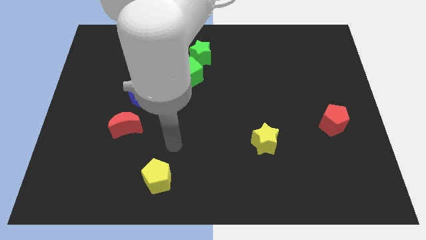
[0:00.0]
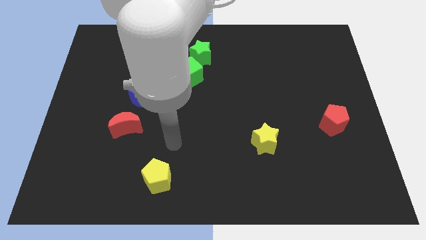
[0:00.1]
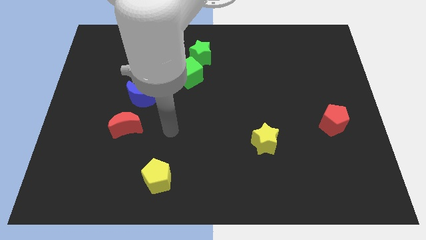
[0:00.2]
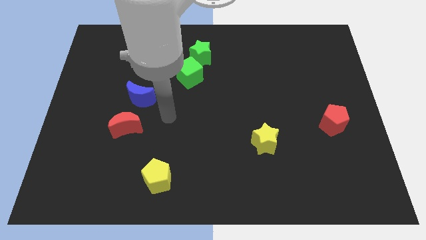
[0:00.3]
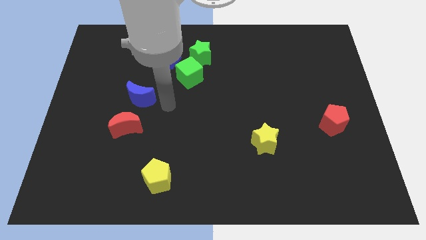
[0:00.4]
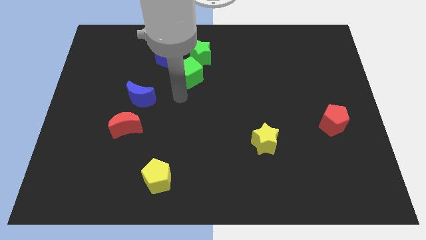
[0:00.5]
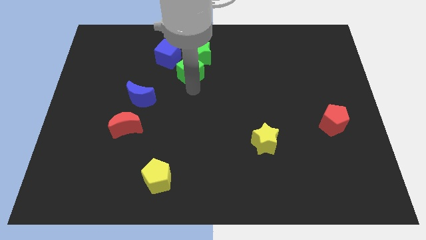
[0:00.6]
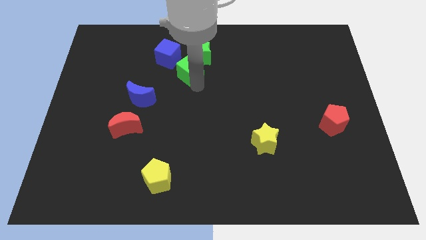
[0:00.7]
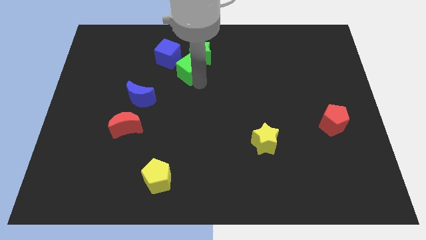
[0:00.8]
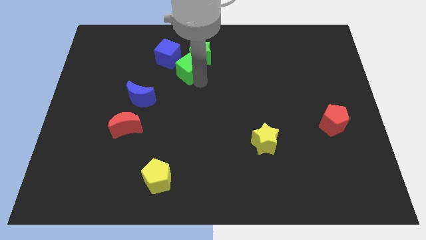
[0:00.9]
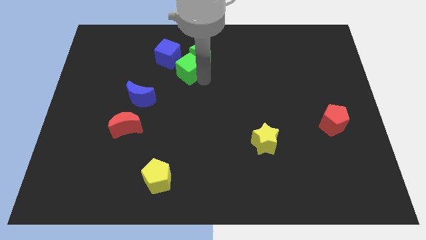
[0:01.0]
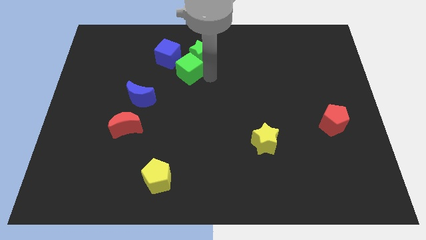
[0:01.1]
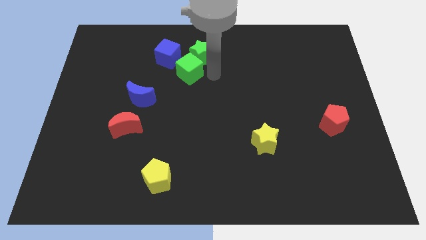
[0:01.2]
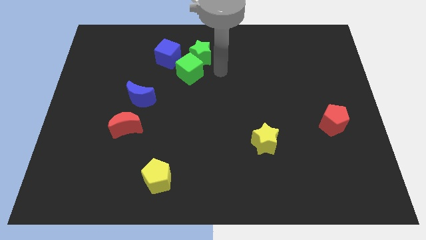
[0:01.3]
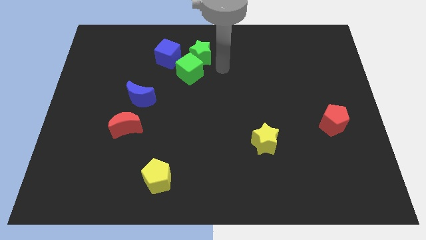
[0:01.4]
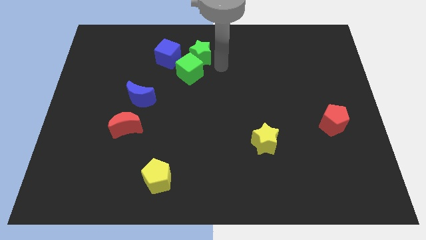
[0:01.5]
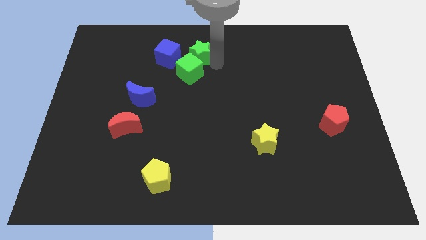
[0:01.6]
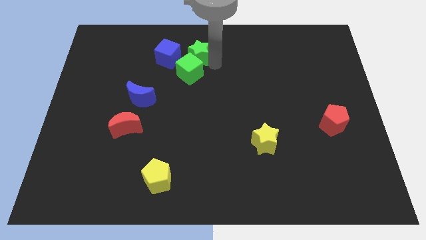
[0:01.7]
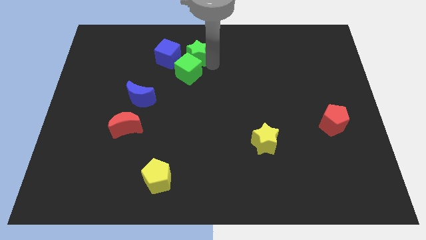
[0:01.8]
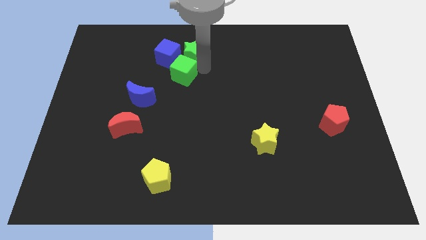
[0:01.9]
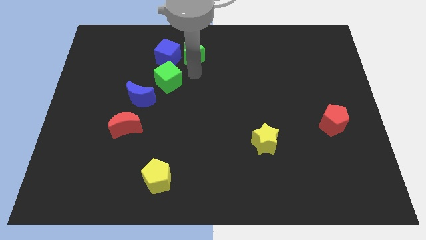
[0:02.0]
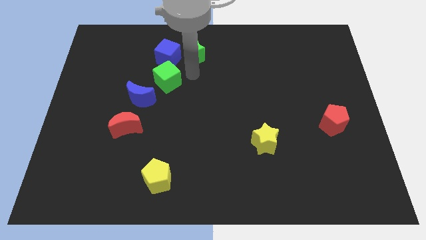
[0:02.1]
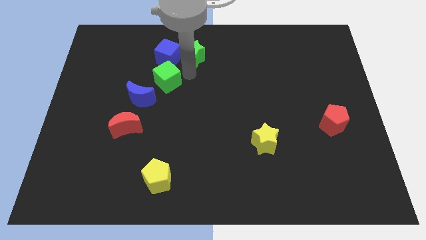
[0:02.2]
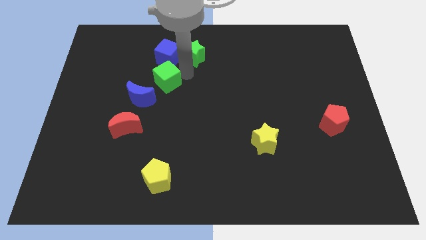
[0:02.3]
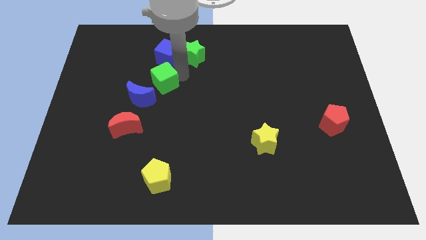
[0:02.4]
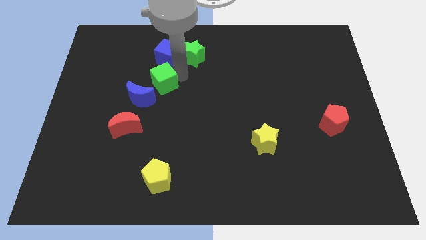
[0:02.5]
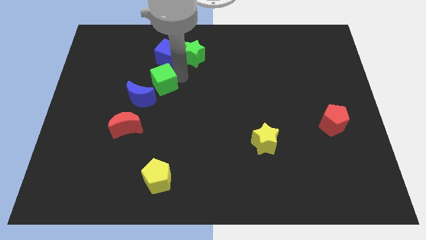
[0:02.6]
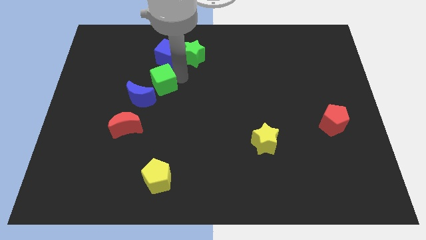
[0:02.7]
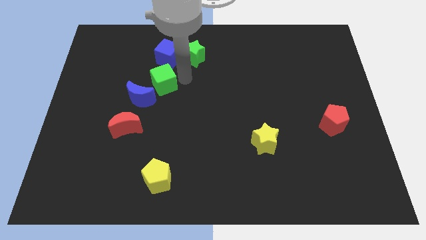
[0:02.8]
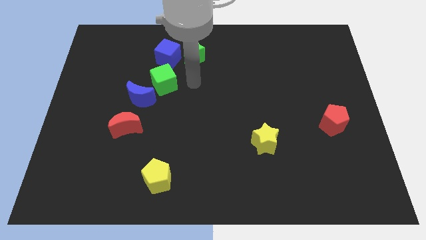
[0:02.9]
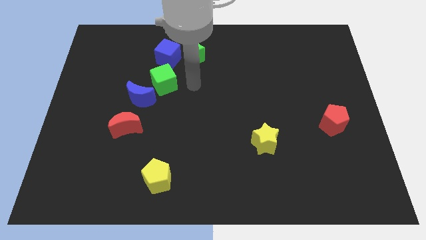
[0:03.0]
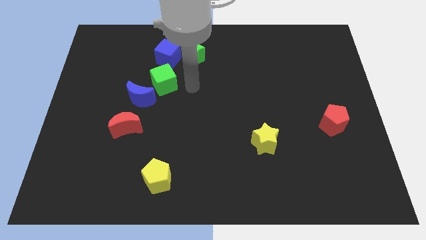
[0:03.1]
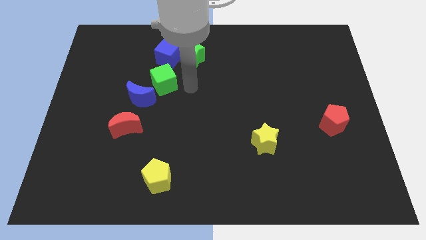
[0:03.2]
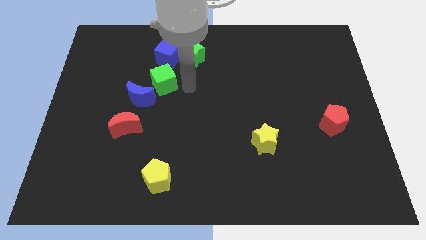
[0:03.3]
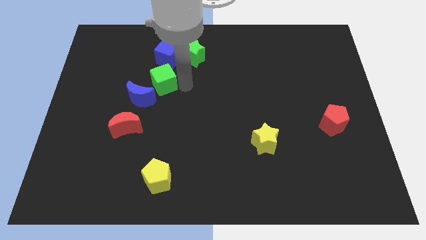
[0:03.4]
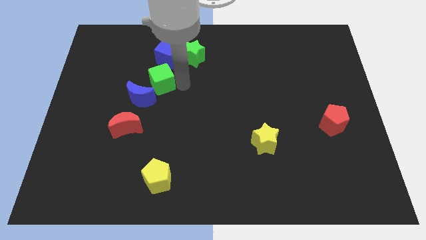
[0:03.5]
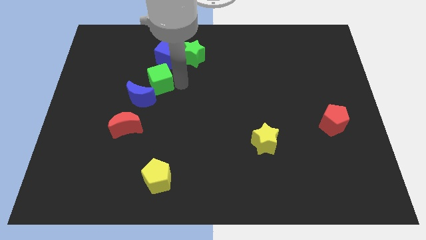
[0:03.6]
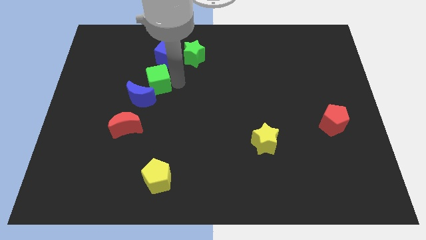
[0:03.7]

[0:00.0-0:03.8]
push the green cube to the bottom of the blue cube

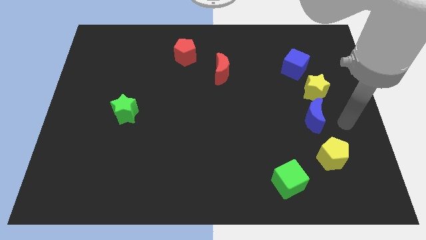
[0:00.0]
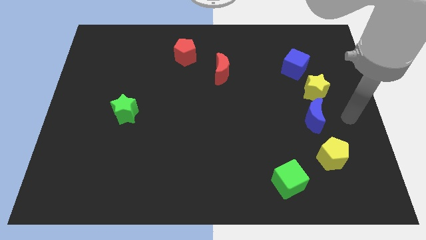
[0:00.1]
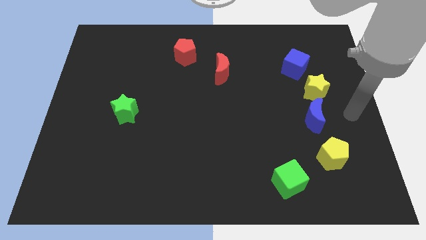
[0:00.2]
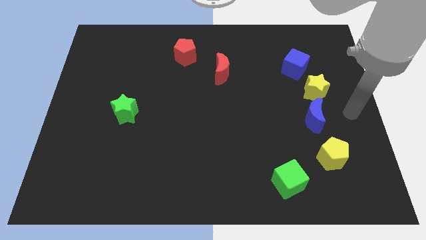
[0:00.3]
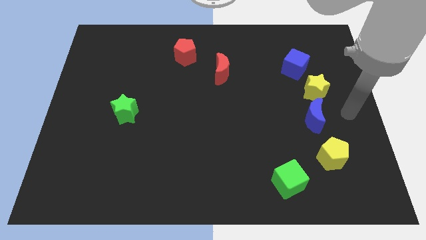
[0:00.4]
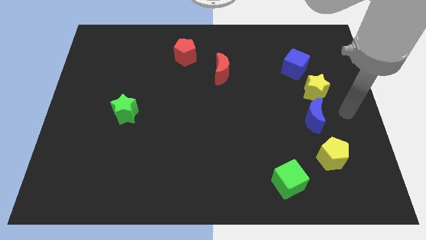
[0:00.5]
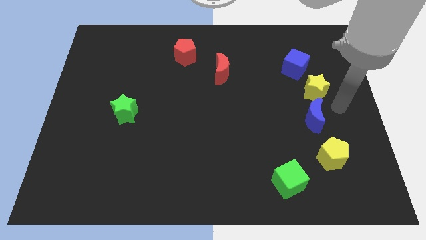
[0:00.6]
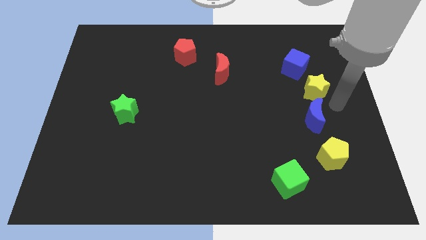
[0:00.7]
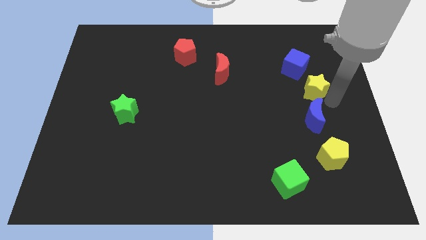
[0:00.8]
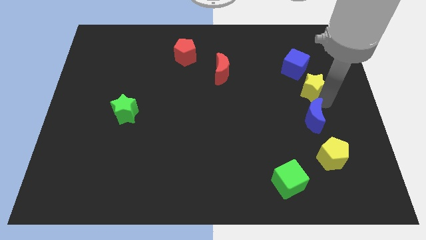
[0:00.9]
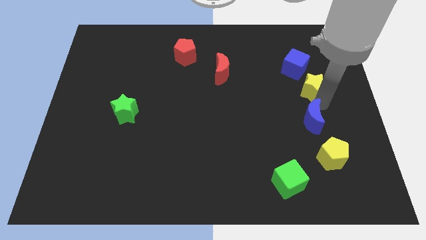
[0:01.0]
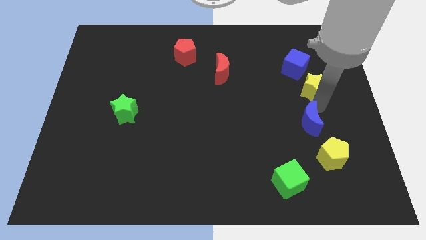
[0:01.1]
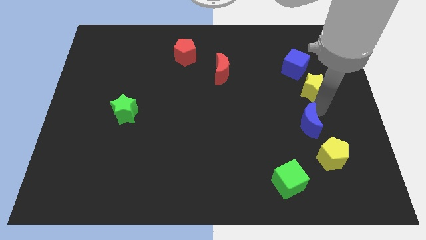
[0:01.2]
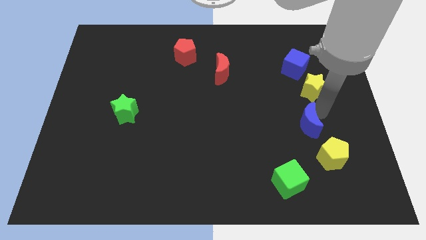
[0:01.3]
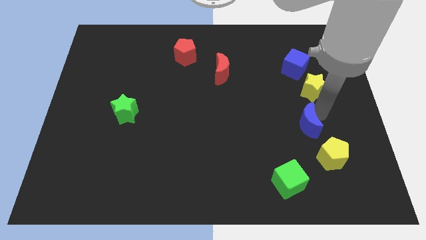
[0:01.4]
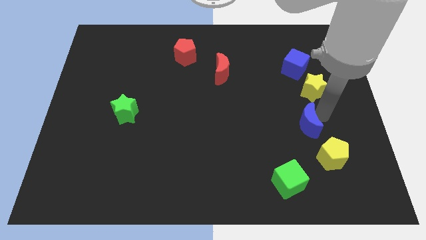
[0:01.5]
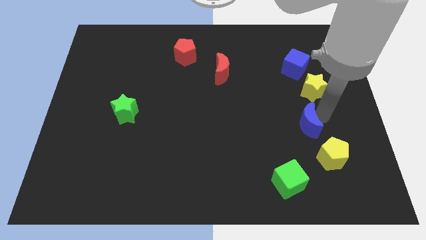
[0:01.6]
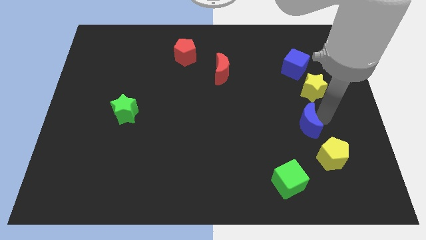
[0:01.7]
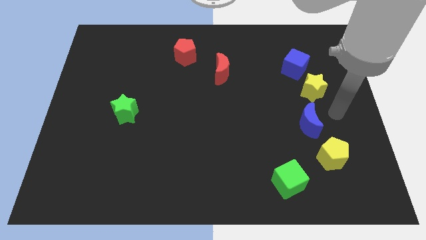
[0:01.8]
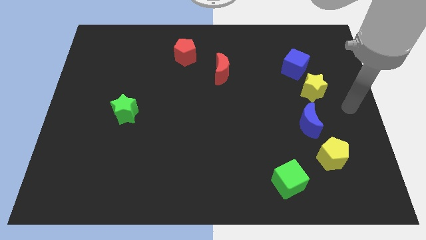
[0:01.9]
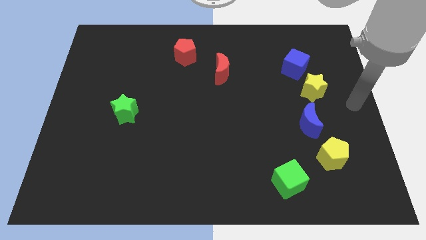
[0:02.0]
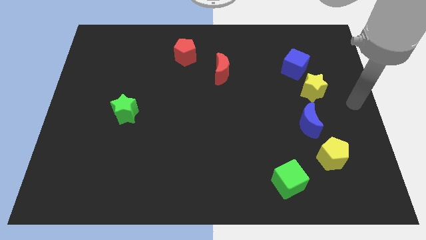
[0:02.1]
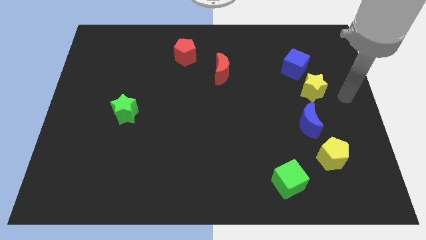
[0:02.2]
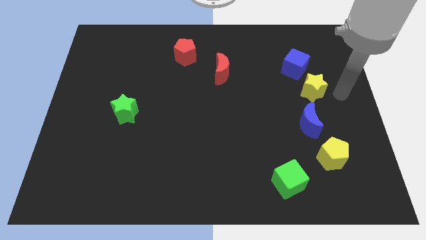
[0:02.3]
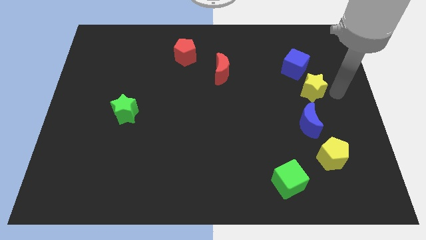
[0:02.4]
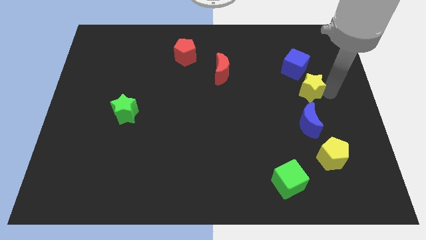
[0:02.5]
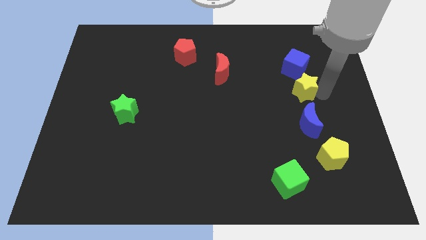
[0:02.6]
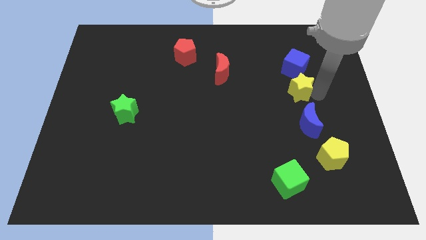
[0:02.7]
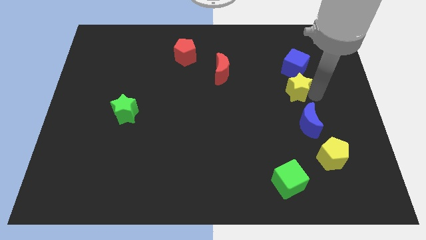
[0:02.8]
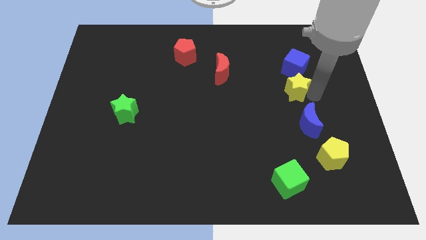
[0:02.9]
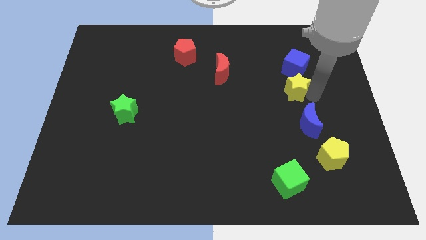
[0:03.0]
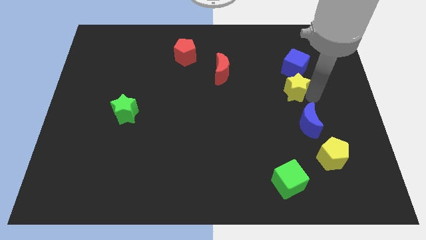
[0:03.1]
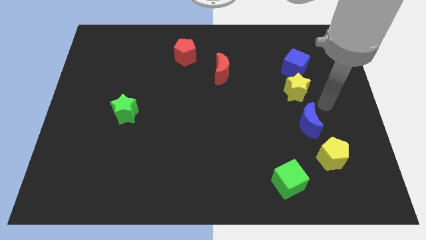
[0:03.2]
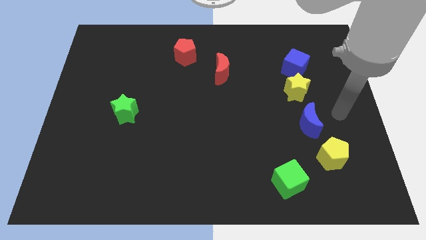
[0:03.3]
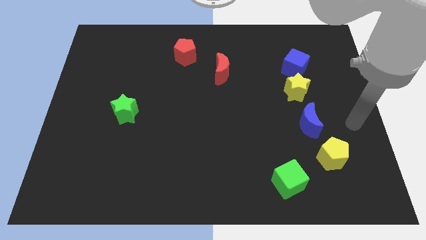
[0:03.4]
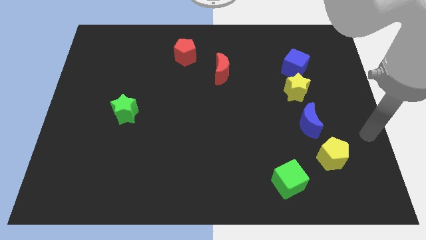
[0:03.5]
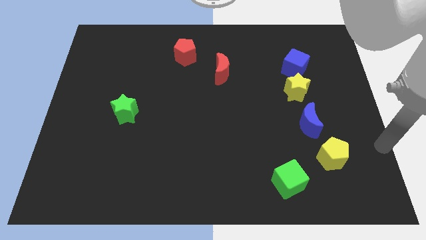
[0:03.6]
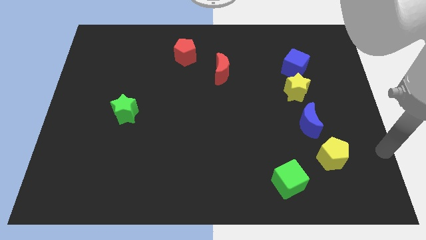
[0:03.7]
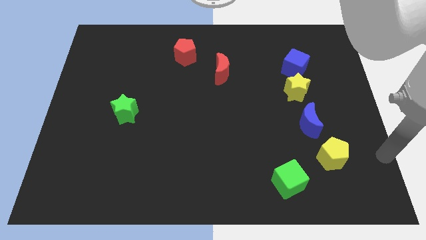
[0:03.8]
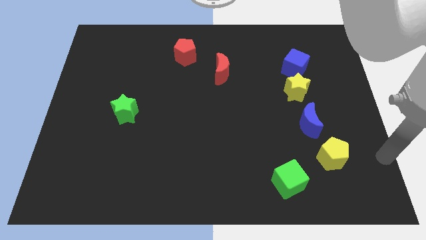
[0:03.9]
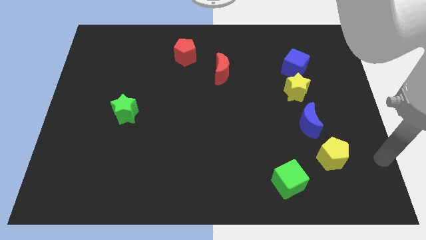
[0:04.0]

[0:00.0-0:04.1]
move blue crescent in between yellow star and yellow pentagon

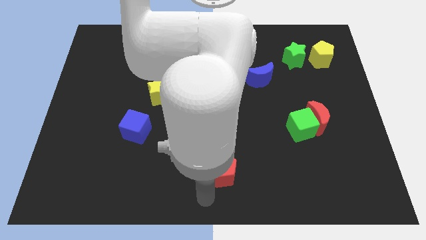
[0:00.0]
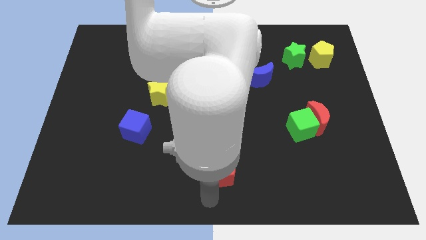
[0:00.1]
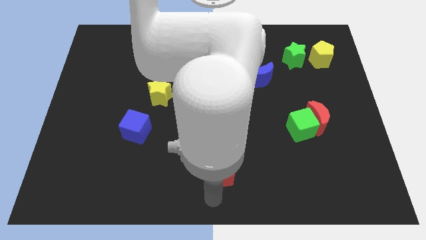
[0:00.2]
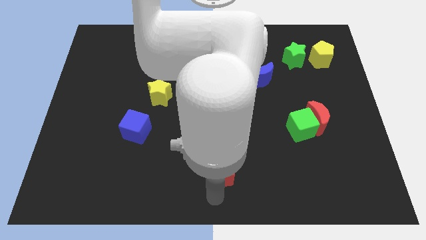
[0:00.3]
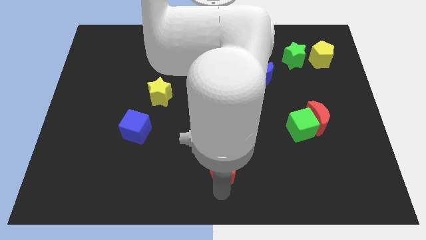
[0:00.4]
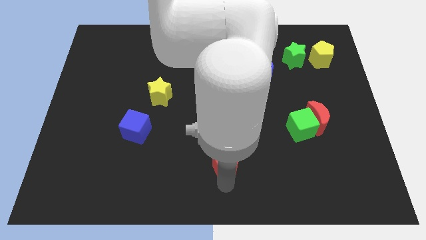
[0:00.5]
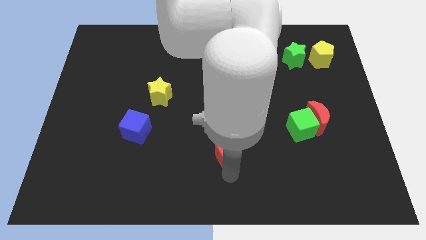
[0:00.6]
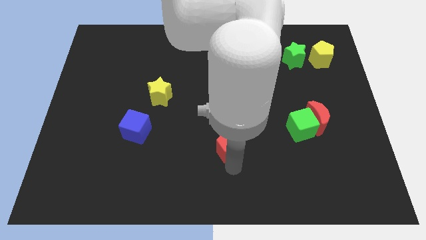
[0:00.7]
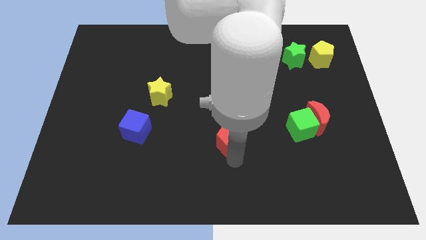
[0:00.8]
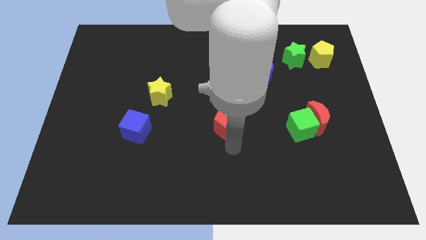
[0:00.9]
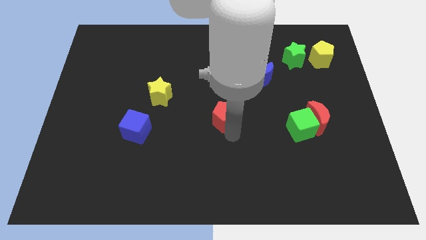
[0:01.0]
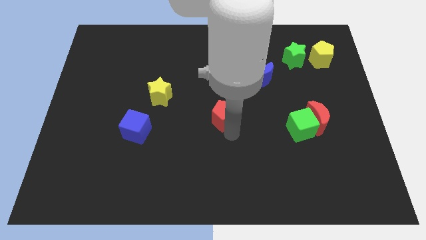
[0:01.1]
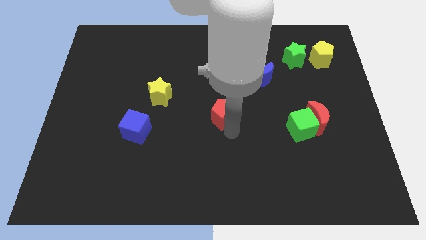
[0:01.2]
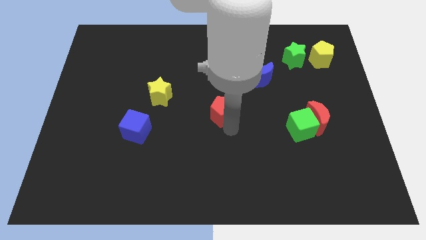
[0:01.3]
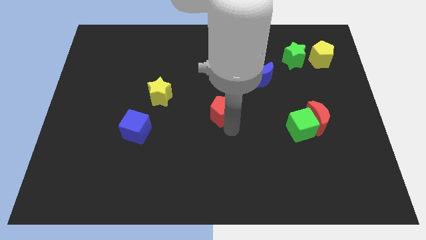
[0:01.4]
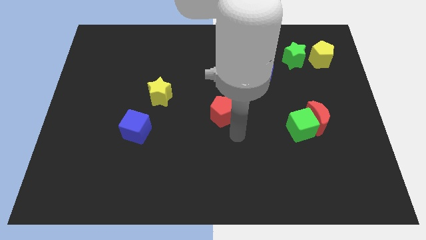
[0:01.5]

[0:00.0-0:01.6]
move the red pentagon to the center of the board
